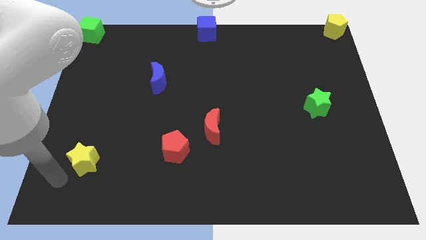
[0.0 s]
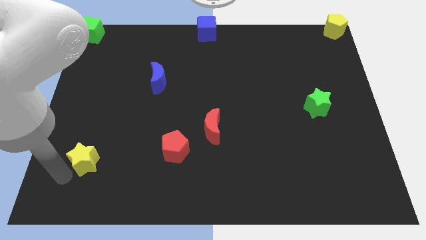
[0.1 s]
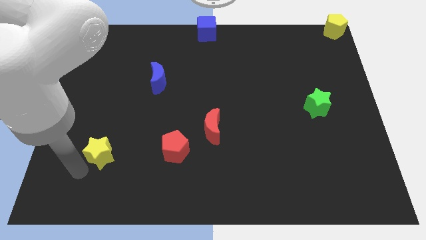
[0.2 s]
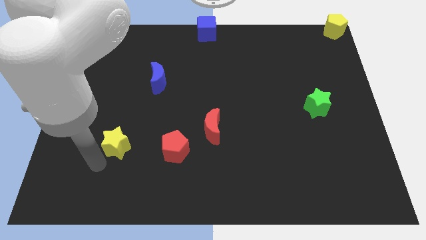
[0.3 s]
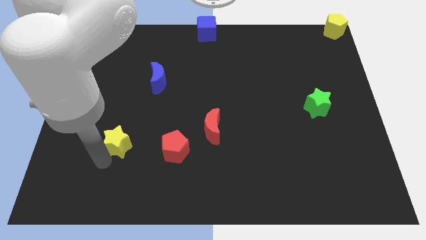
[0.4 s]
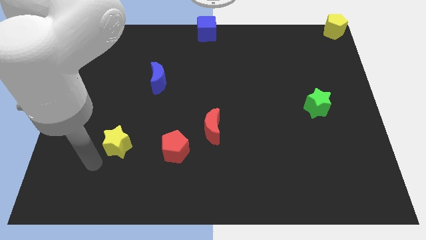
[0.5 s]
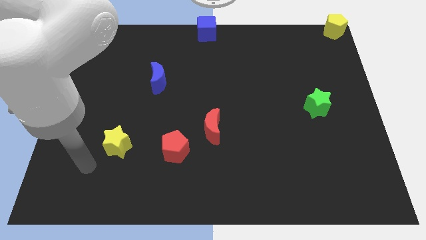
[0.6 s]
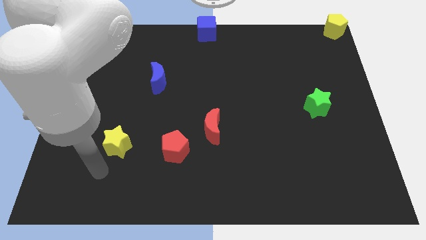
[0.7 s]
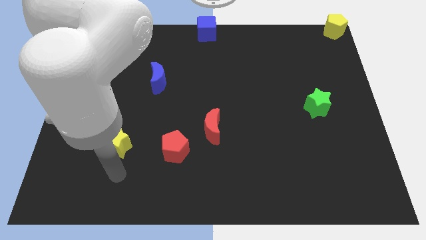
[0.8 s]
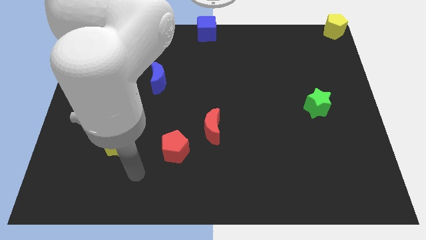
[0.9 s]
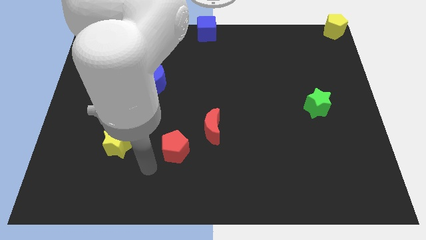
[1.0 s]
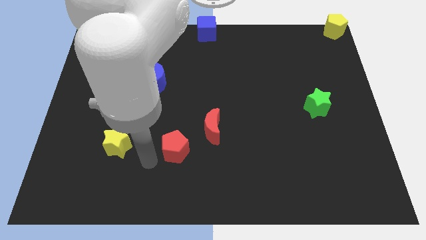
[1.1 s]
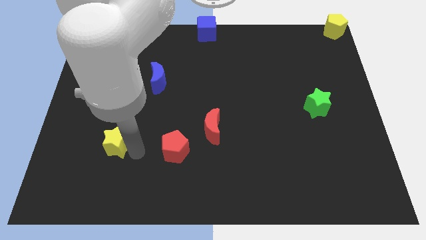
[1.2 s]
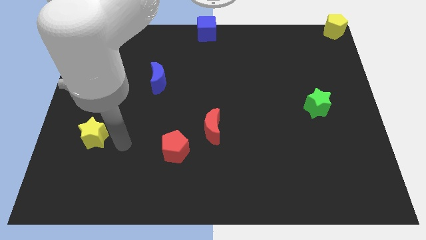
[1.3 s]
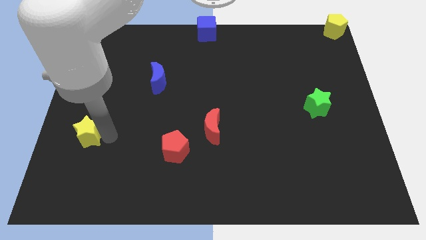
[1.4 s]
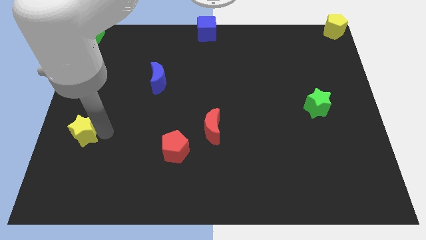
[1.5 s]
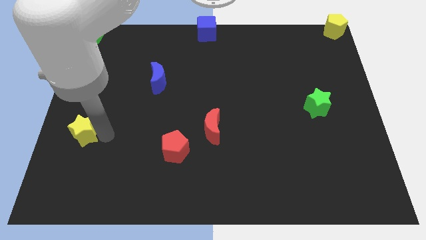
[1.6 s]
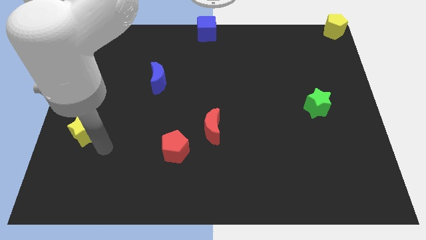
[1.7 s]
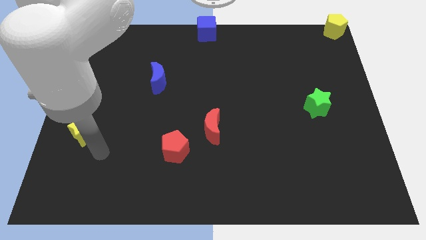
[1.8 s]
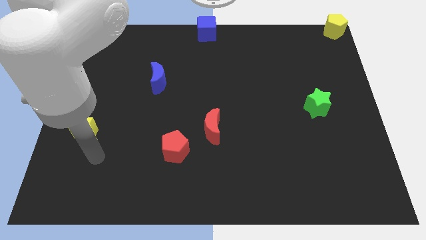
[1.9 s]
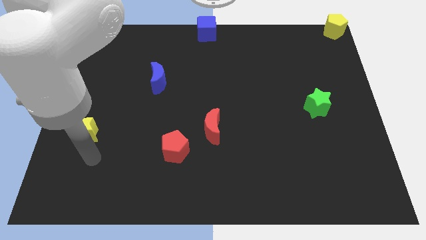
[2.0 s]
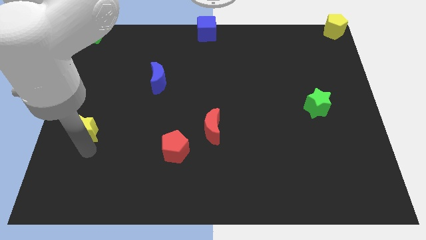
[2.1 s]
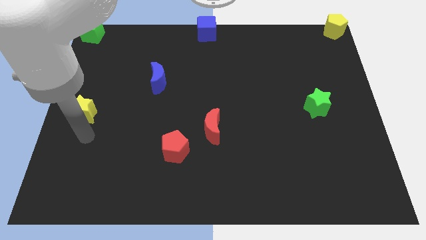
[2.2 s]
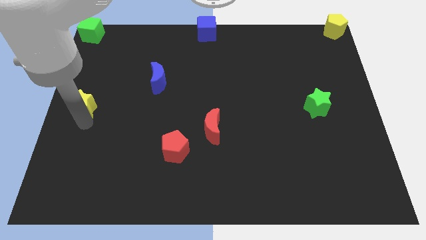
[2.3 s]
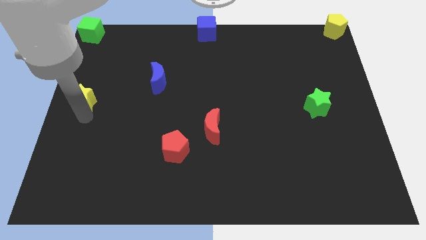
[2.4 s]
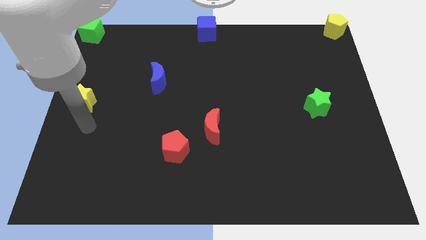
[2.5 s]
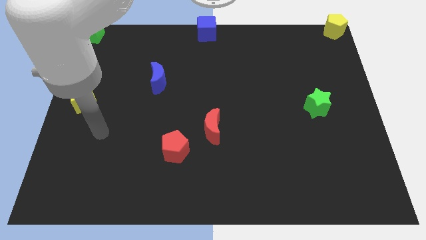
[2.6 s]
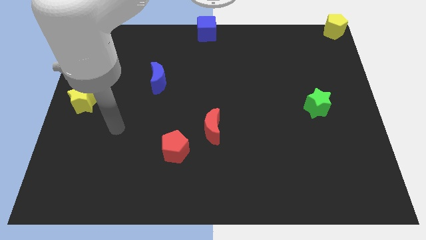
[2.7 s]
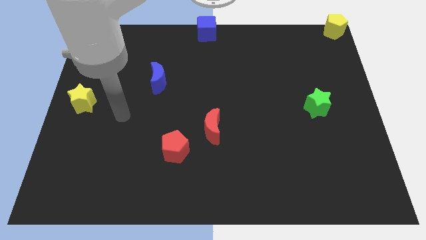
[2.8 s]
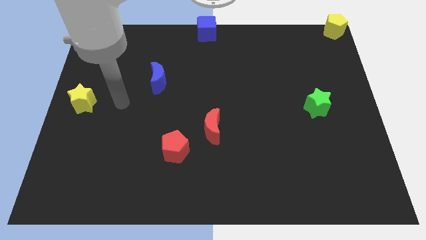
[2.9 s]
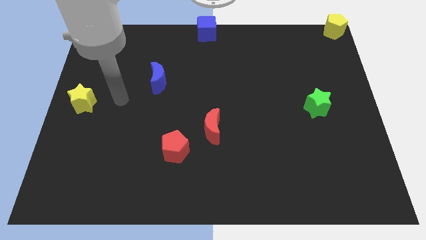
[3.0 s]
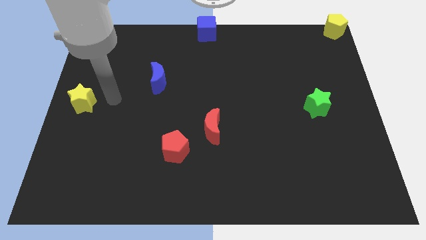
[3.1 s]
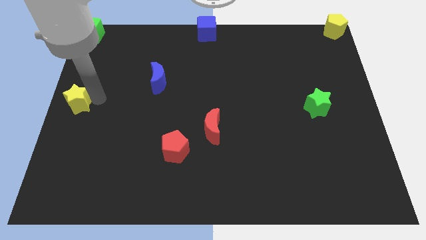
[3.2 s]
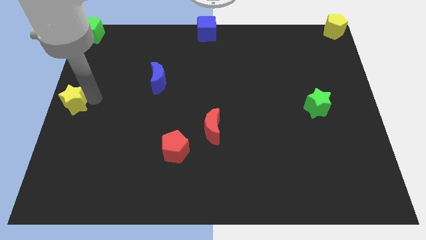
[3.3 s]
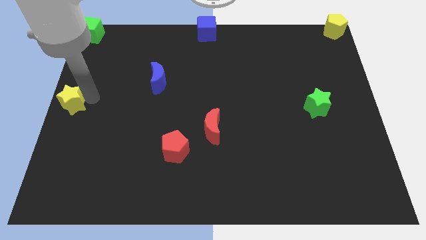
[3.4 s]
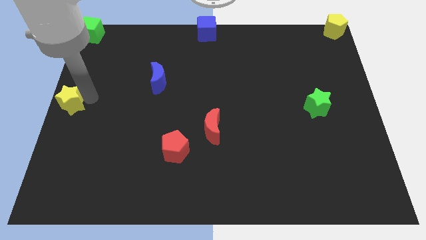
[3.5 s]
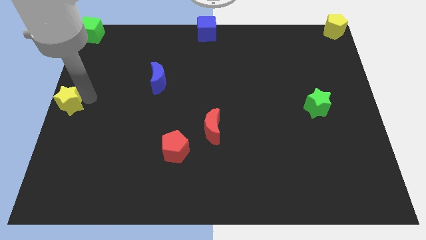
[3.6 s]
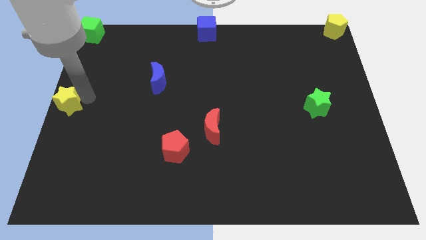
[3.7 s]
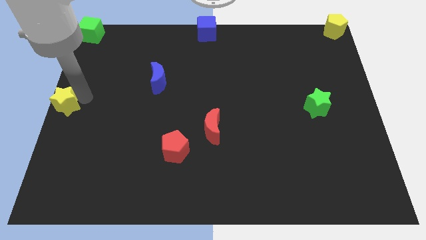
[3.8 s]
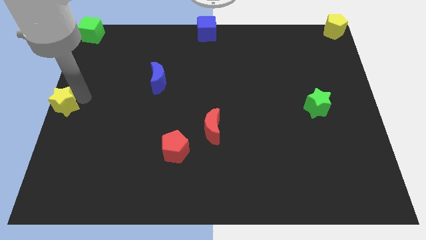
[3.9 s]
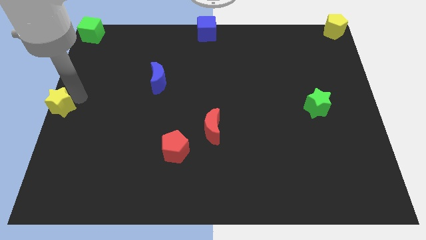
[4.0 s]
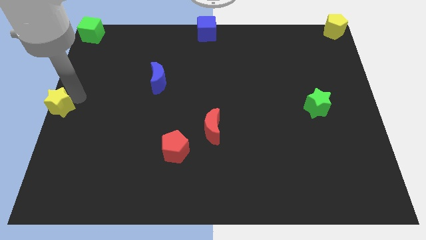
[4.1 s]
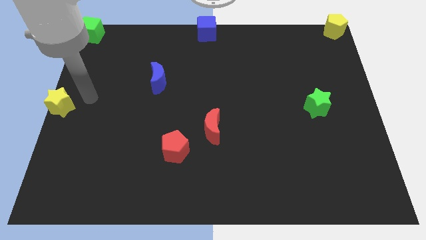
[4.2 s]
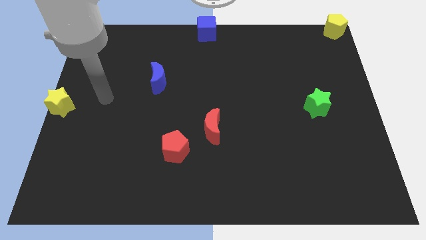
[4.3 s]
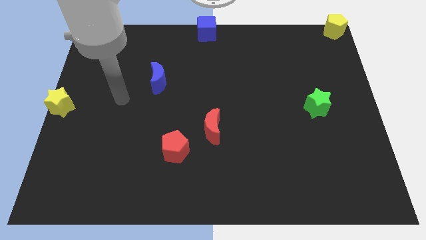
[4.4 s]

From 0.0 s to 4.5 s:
push the yellow star to the center left of the board

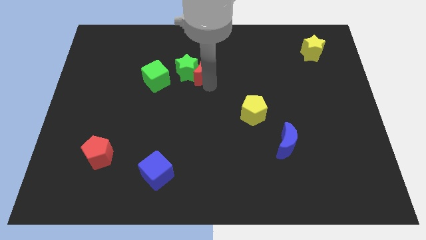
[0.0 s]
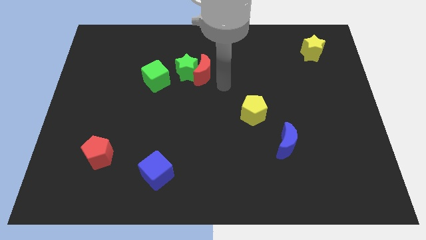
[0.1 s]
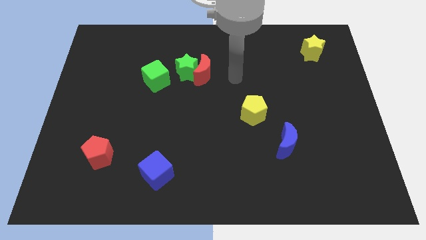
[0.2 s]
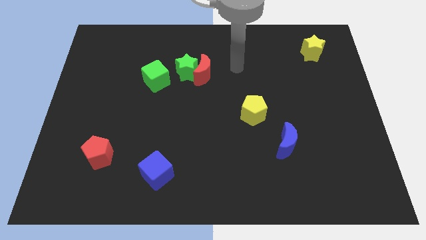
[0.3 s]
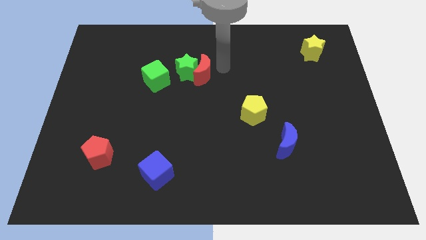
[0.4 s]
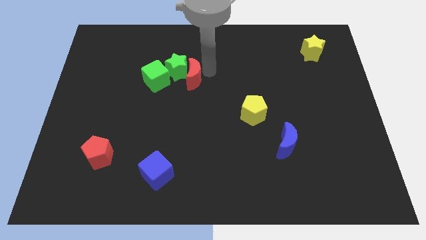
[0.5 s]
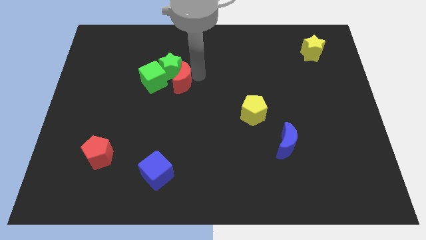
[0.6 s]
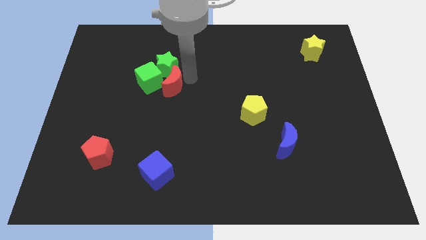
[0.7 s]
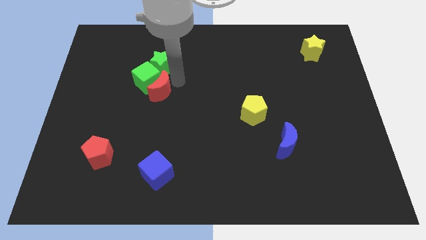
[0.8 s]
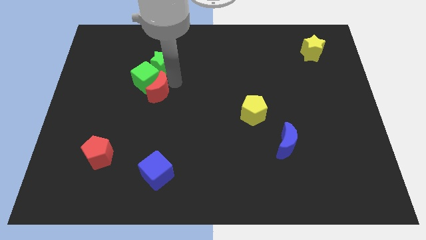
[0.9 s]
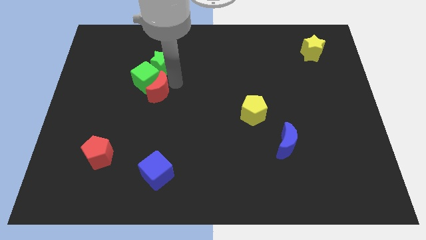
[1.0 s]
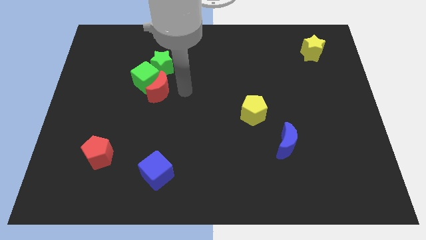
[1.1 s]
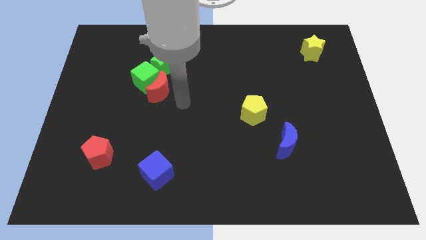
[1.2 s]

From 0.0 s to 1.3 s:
place red crescent into green cube

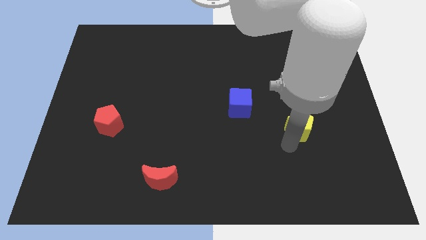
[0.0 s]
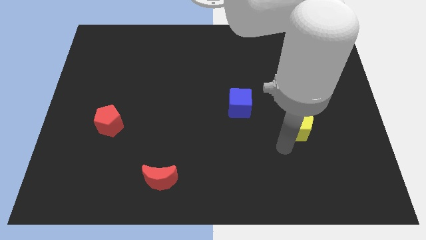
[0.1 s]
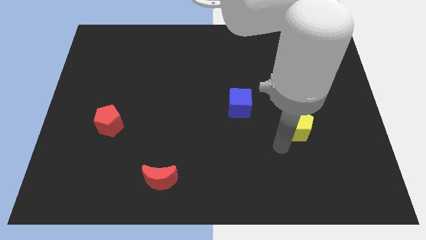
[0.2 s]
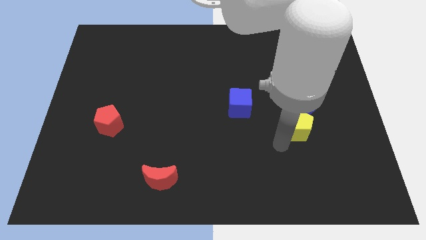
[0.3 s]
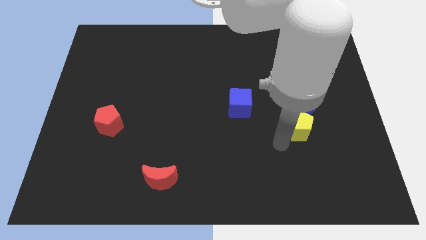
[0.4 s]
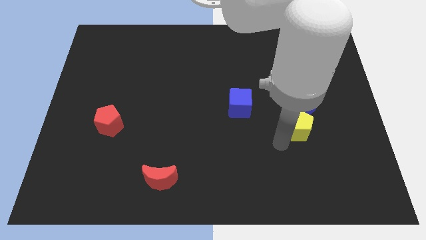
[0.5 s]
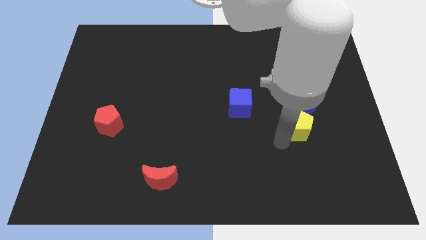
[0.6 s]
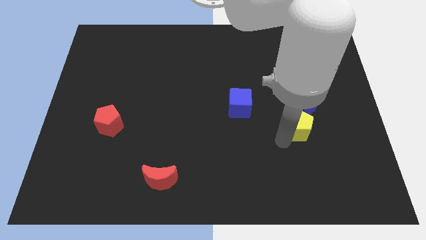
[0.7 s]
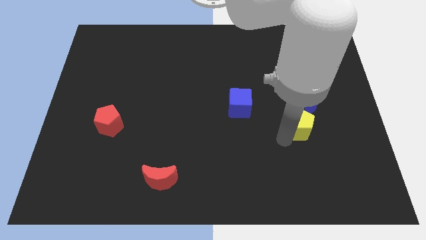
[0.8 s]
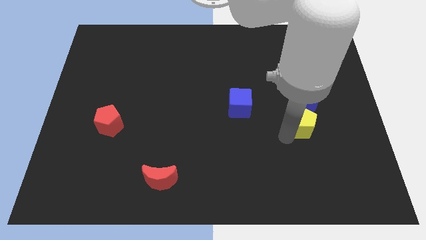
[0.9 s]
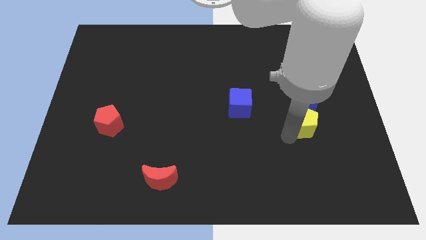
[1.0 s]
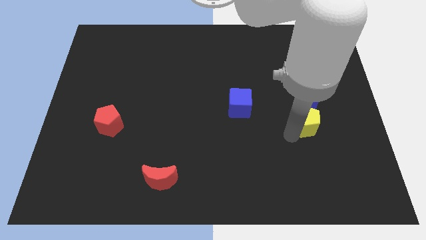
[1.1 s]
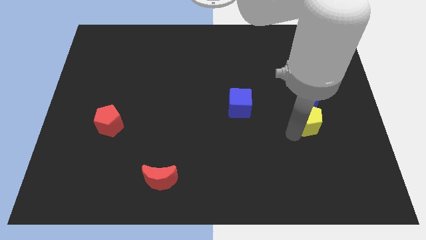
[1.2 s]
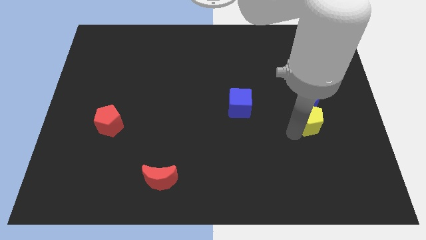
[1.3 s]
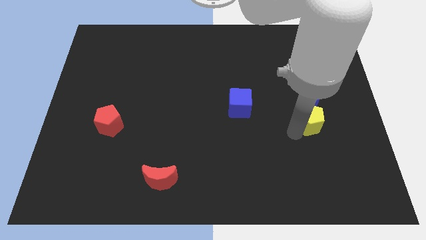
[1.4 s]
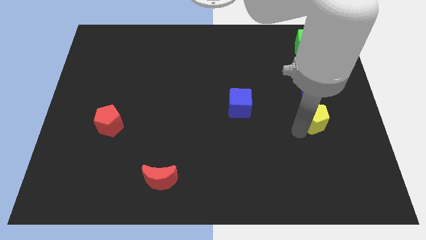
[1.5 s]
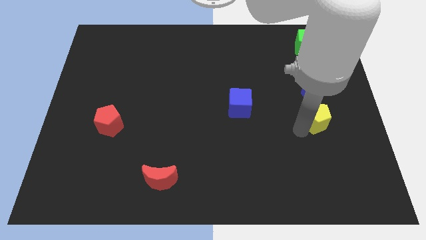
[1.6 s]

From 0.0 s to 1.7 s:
place the yellow pentagon at the bottom of the blue crescent

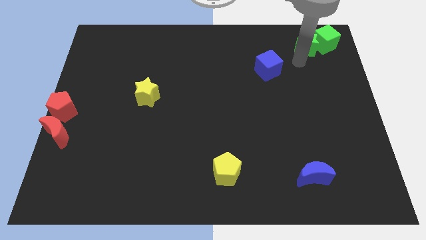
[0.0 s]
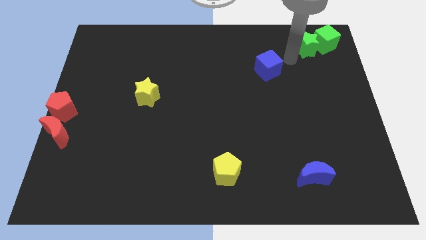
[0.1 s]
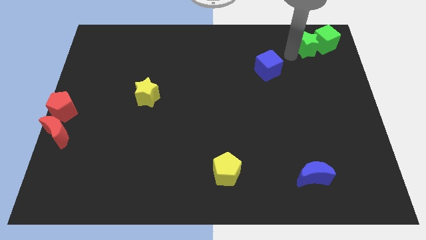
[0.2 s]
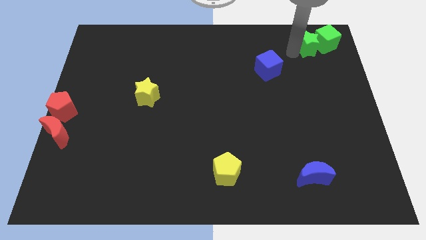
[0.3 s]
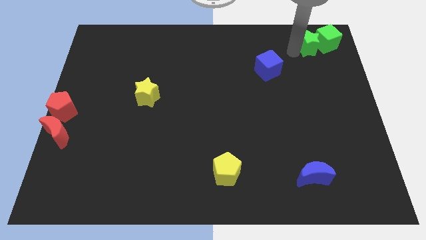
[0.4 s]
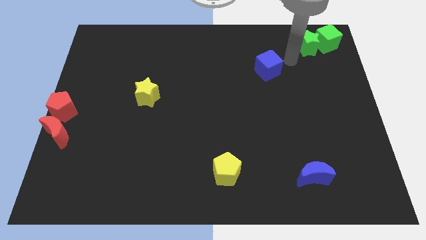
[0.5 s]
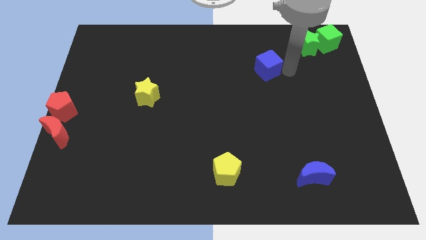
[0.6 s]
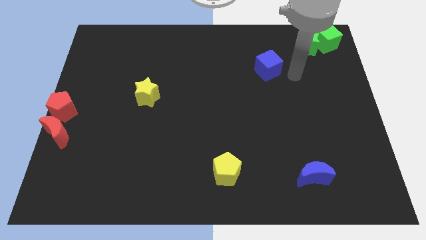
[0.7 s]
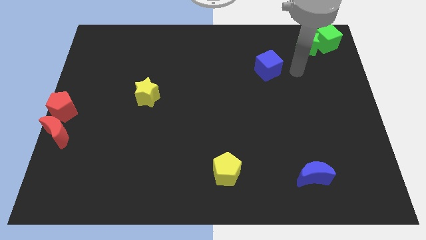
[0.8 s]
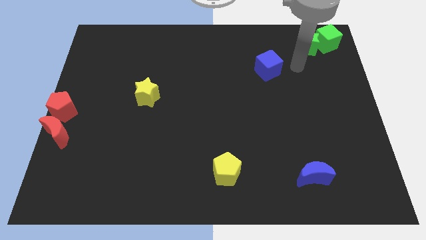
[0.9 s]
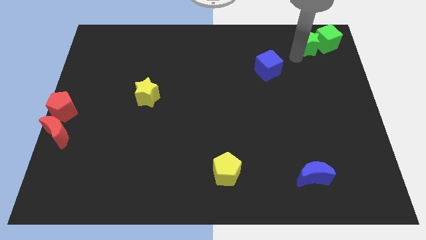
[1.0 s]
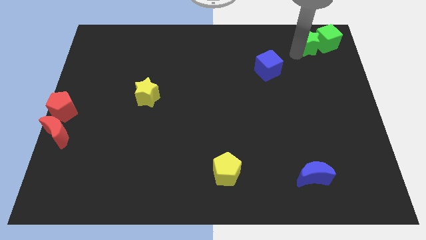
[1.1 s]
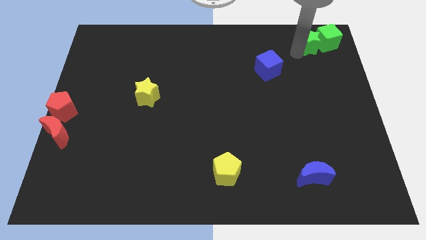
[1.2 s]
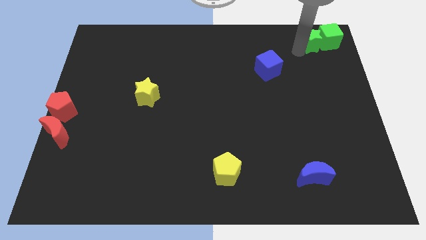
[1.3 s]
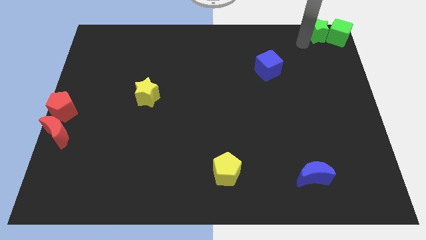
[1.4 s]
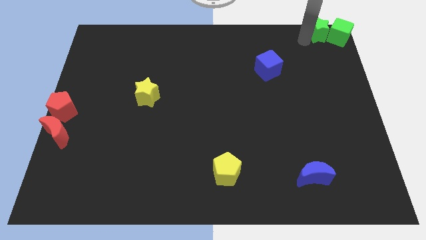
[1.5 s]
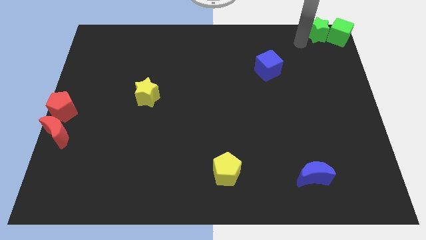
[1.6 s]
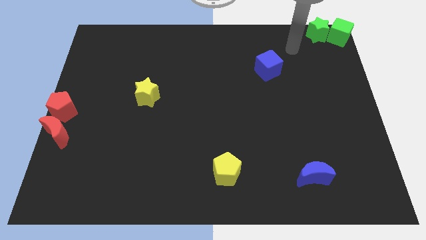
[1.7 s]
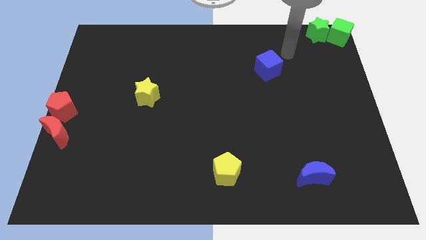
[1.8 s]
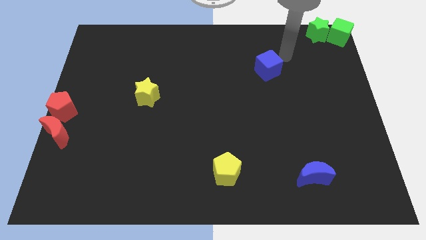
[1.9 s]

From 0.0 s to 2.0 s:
move the green blocks to the top right corner of the board
